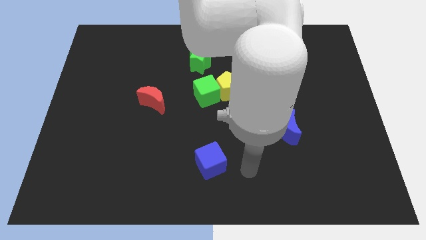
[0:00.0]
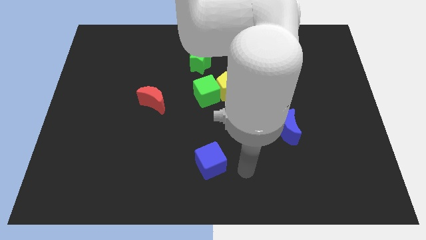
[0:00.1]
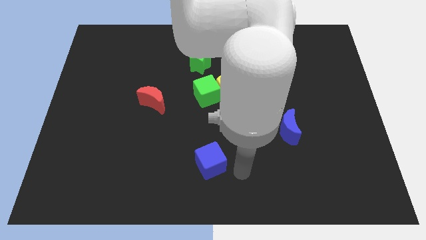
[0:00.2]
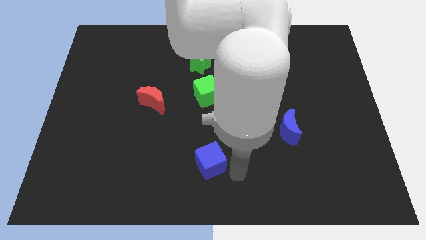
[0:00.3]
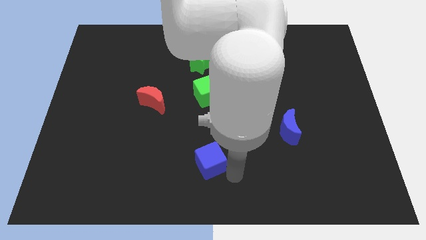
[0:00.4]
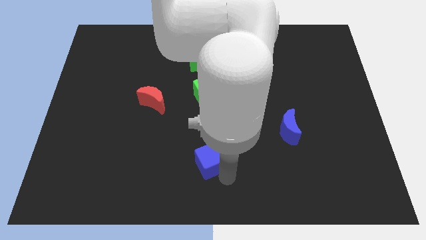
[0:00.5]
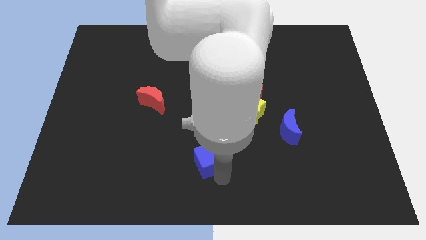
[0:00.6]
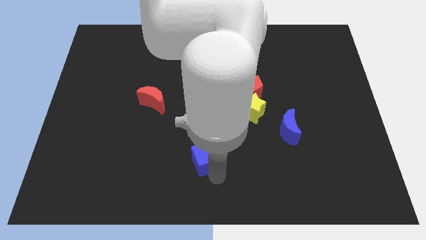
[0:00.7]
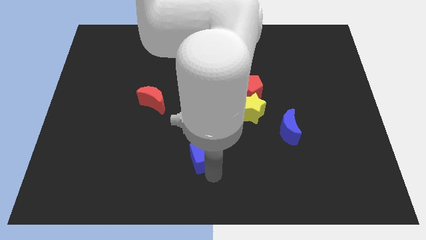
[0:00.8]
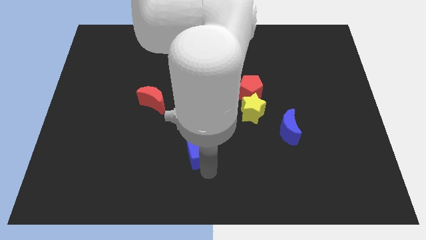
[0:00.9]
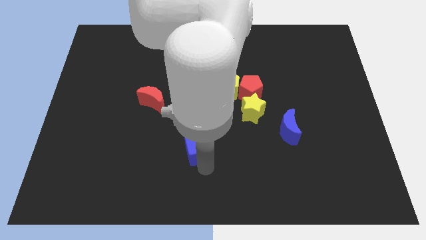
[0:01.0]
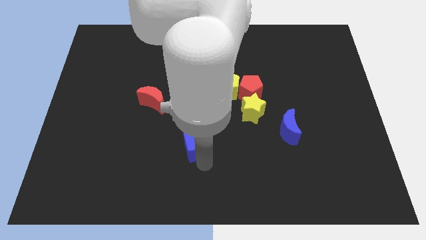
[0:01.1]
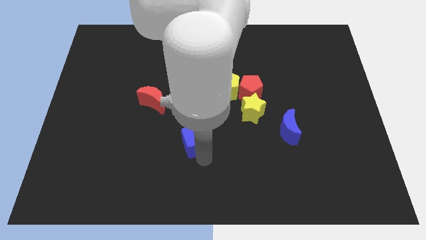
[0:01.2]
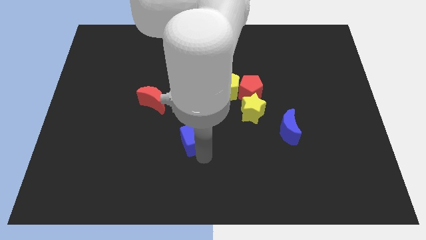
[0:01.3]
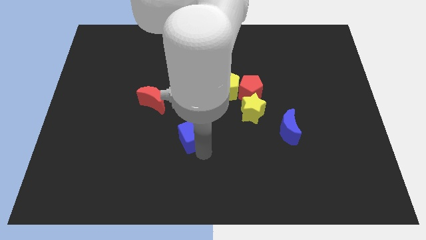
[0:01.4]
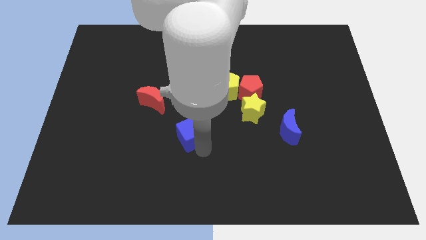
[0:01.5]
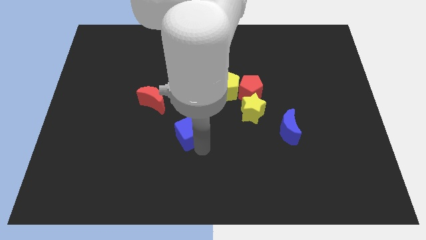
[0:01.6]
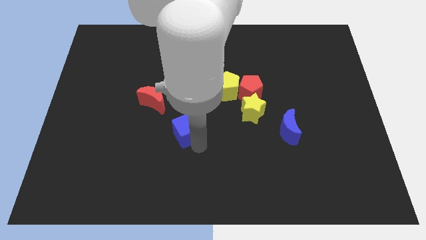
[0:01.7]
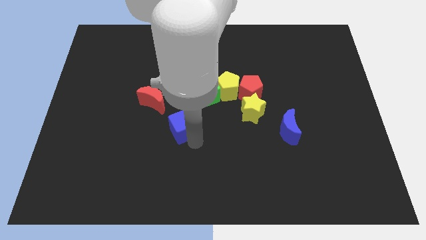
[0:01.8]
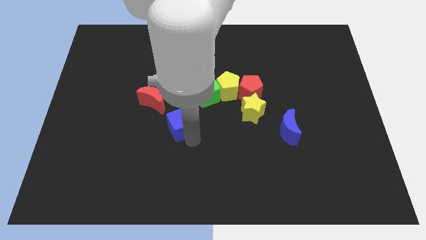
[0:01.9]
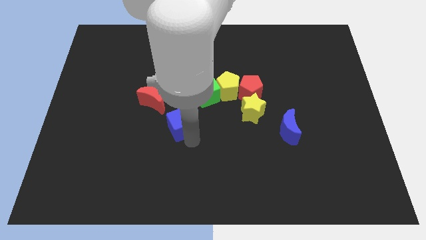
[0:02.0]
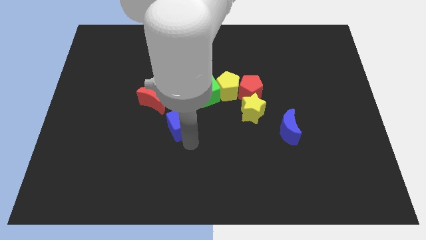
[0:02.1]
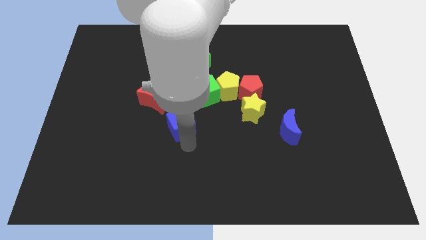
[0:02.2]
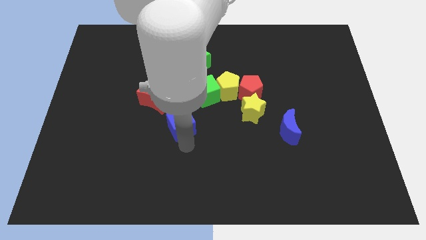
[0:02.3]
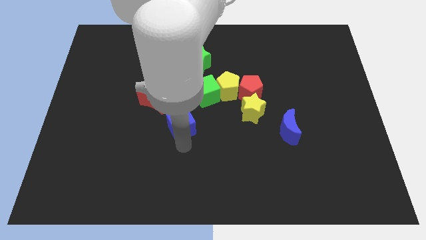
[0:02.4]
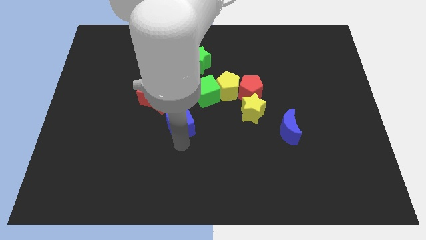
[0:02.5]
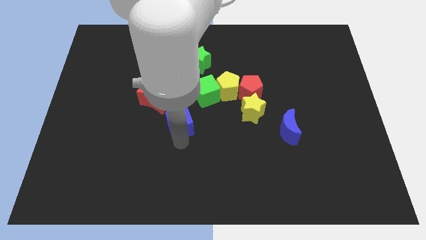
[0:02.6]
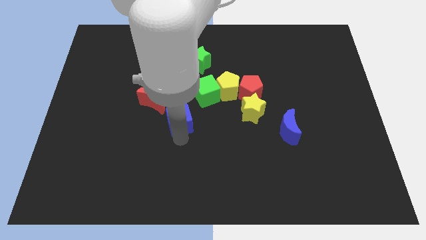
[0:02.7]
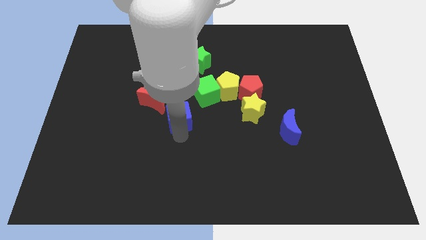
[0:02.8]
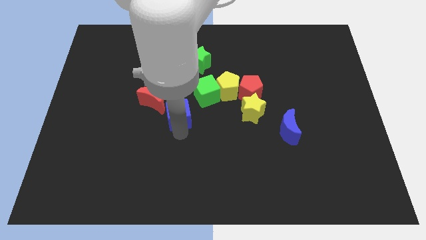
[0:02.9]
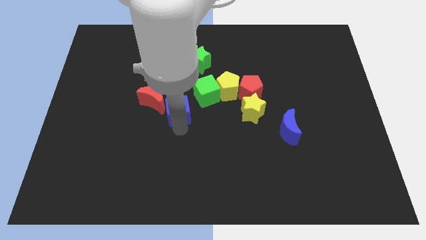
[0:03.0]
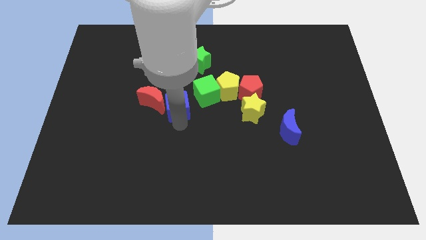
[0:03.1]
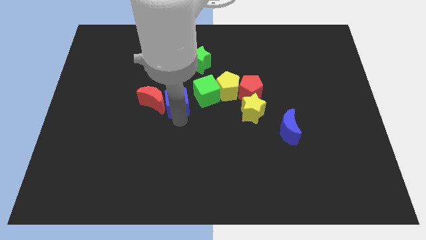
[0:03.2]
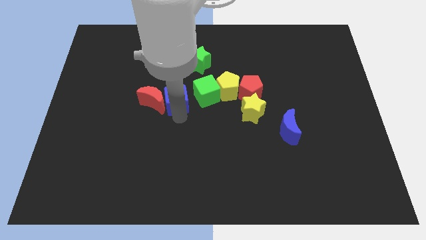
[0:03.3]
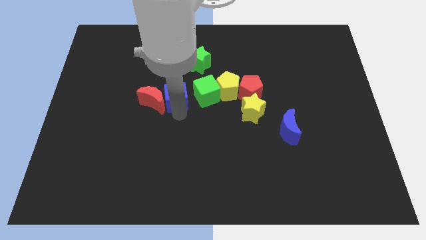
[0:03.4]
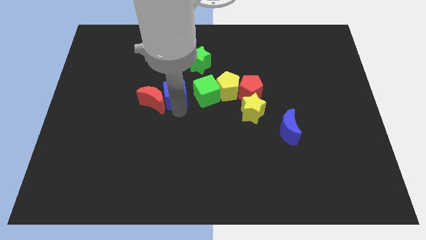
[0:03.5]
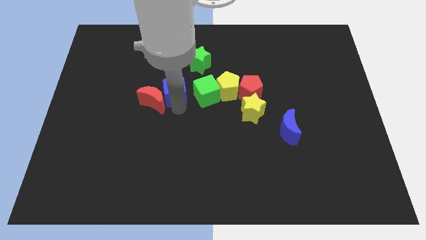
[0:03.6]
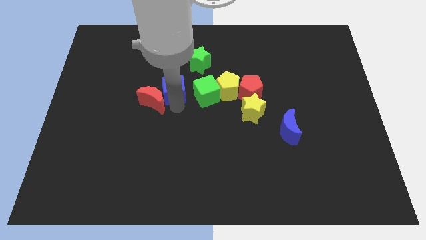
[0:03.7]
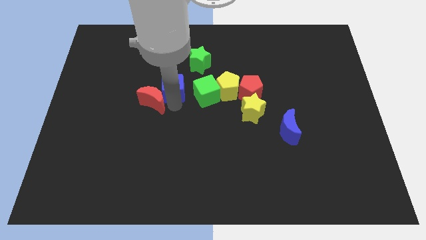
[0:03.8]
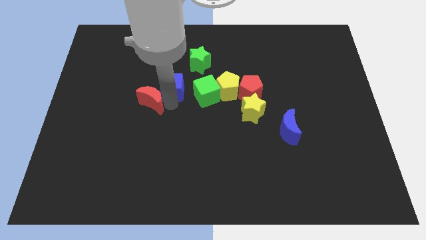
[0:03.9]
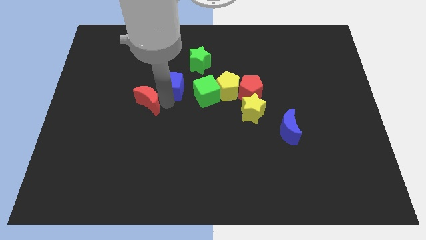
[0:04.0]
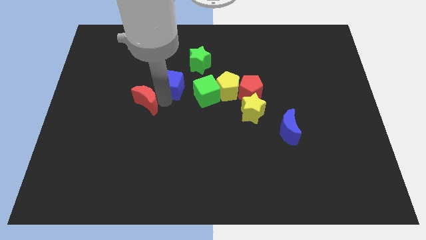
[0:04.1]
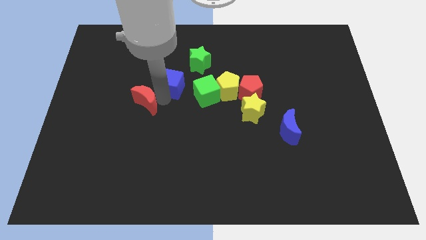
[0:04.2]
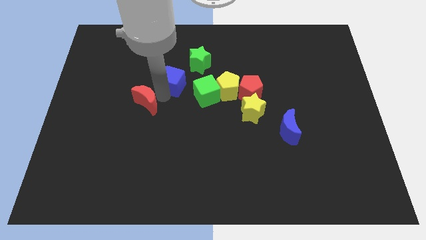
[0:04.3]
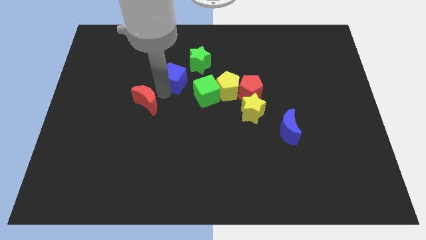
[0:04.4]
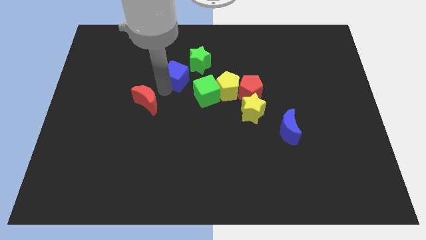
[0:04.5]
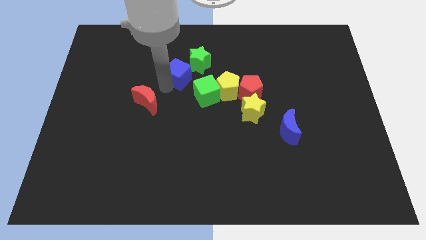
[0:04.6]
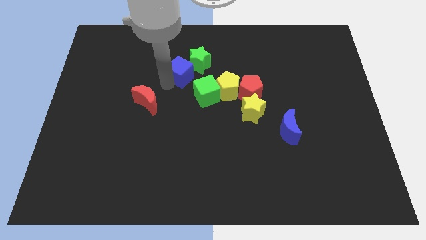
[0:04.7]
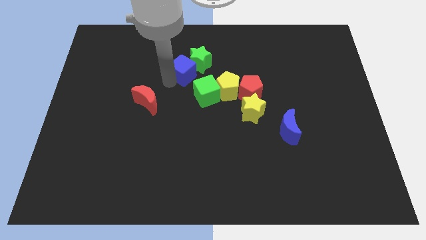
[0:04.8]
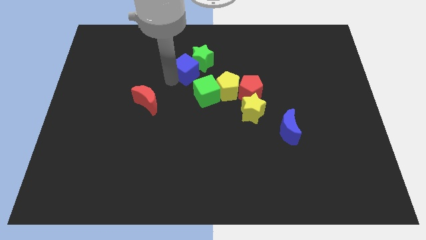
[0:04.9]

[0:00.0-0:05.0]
put the blue cube close to the green star

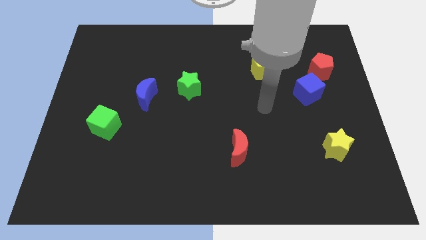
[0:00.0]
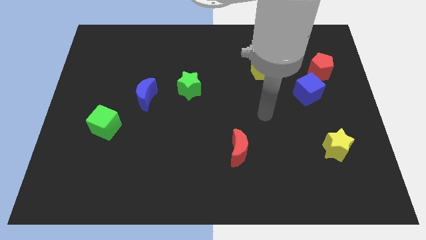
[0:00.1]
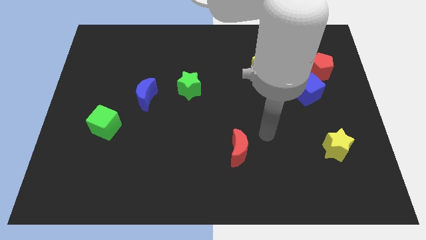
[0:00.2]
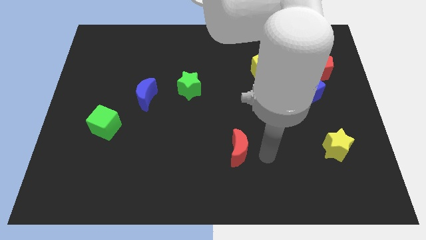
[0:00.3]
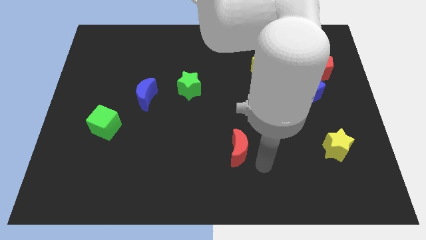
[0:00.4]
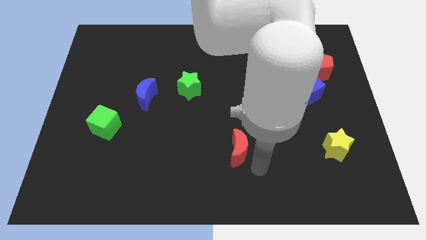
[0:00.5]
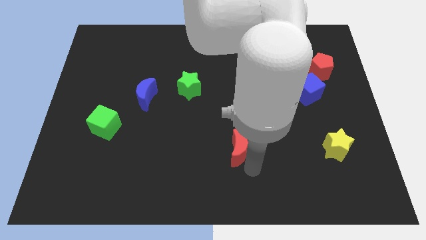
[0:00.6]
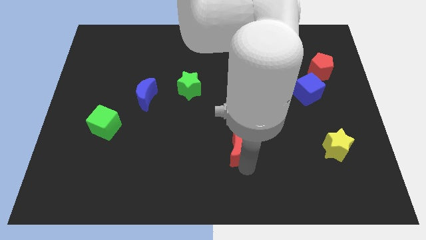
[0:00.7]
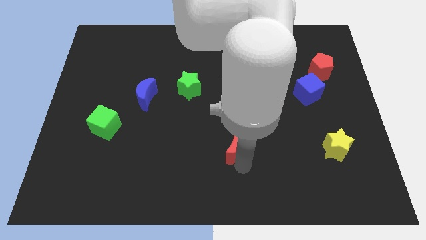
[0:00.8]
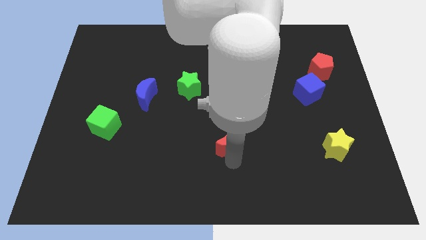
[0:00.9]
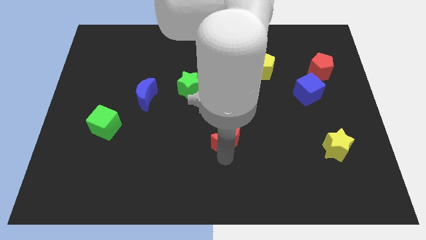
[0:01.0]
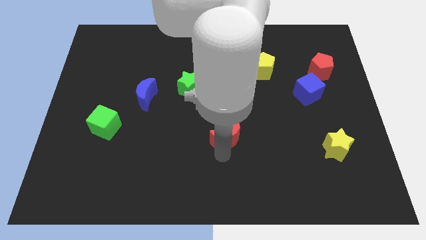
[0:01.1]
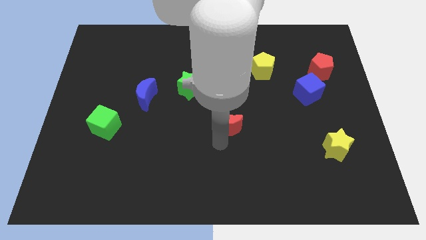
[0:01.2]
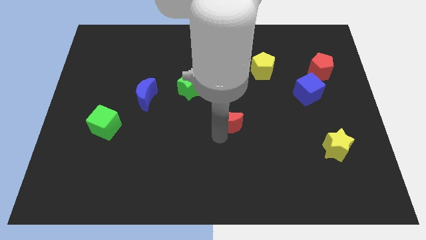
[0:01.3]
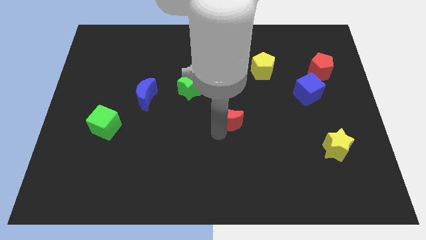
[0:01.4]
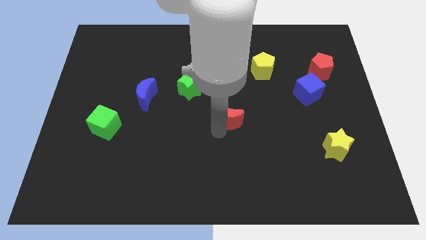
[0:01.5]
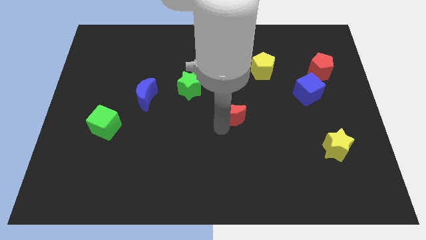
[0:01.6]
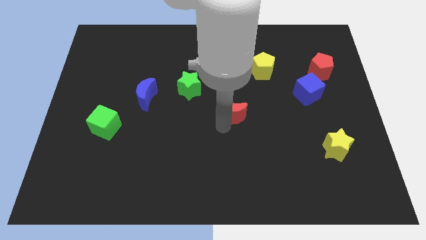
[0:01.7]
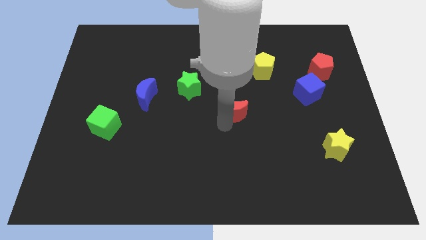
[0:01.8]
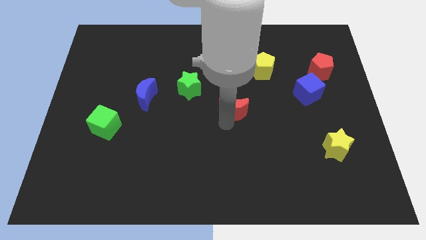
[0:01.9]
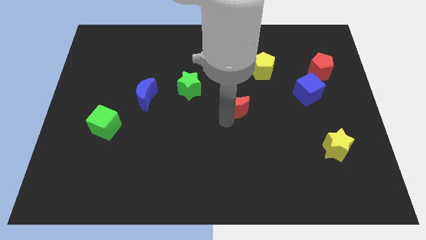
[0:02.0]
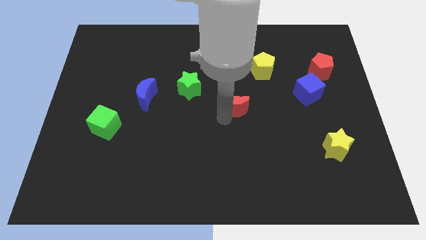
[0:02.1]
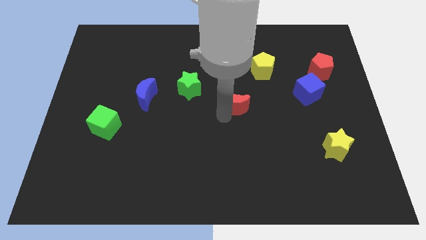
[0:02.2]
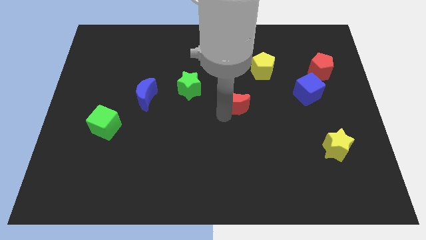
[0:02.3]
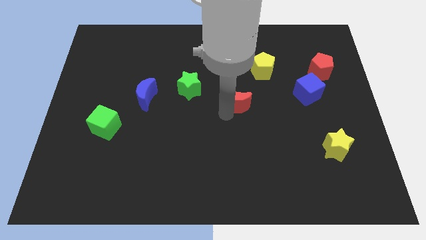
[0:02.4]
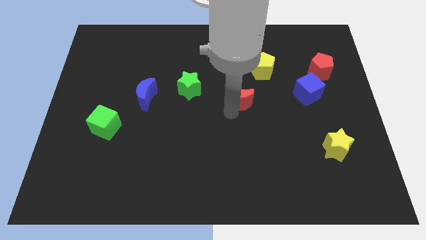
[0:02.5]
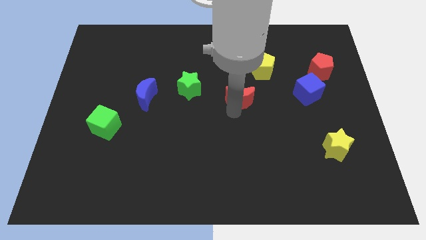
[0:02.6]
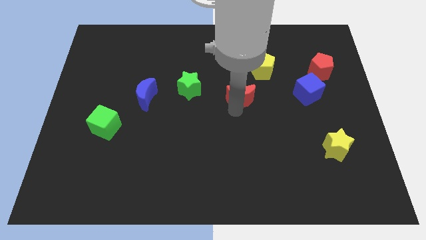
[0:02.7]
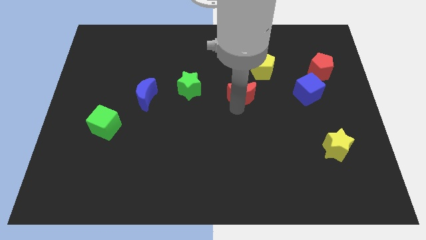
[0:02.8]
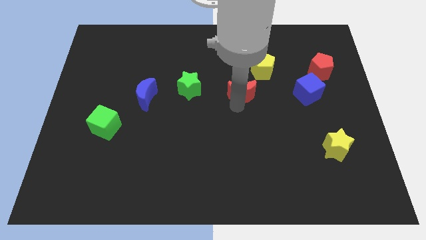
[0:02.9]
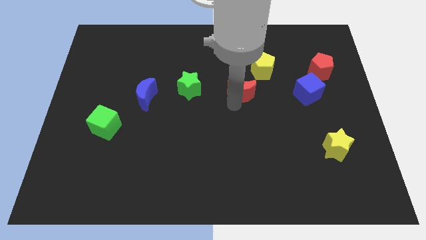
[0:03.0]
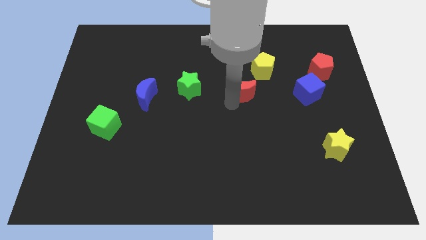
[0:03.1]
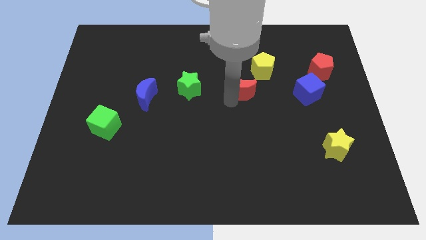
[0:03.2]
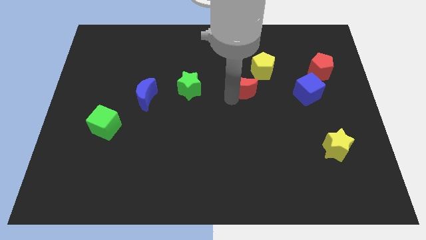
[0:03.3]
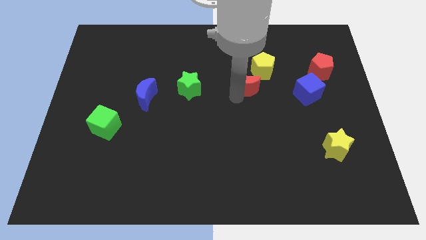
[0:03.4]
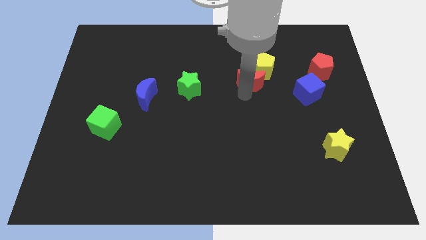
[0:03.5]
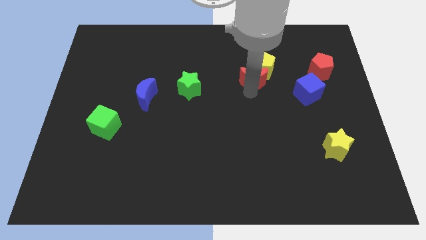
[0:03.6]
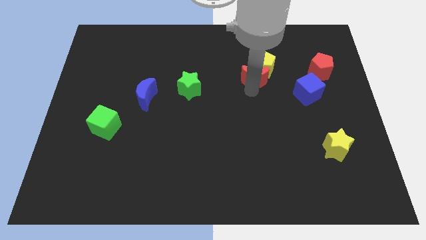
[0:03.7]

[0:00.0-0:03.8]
put the red moon next to the yellow pentagon
